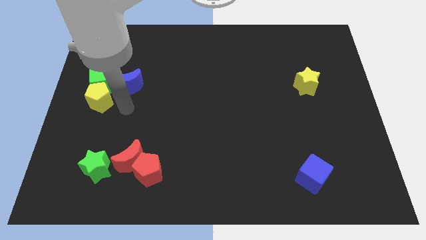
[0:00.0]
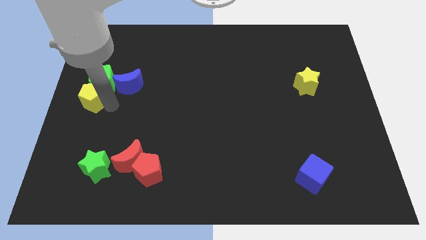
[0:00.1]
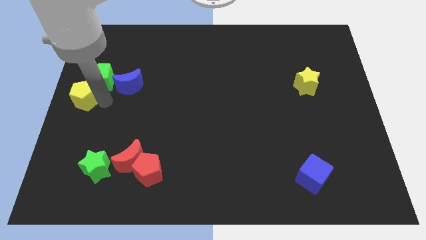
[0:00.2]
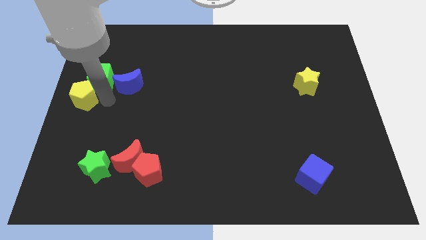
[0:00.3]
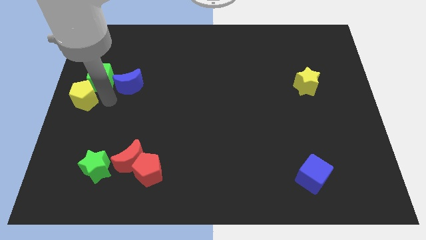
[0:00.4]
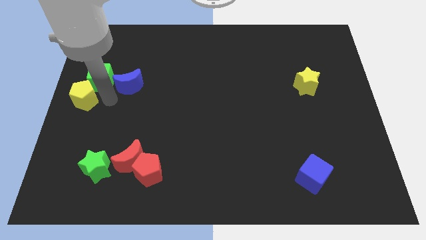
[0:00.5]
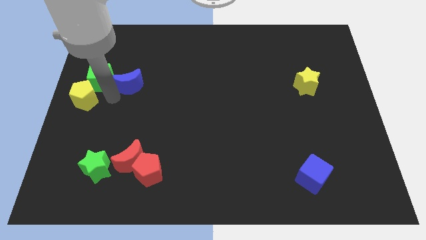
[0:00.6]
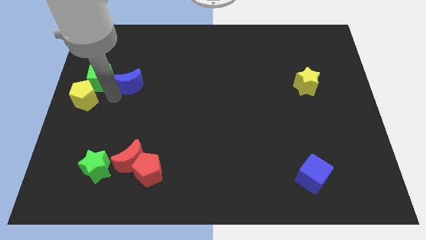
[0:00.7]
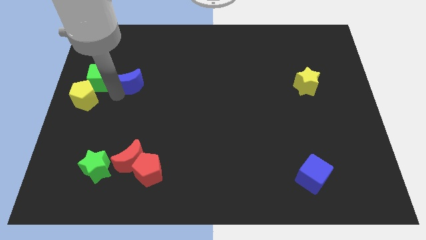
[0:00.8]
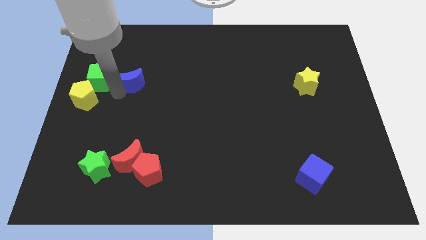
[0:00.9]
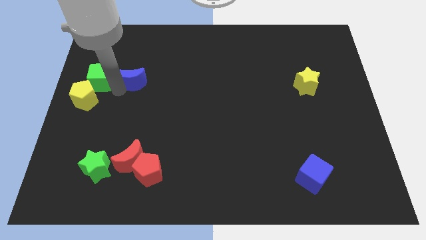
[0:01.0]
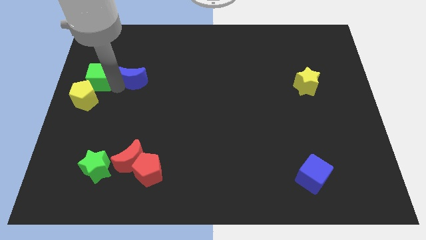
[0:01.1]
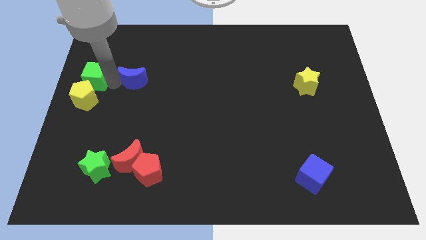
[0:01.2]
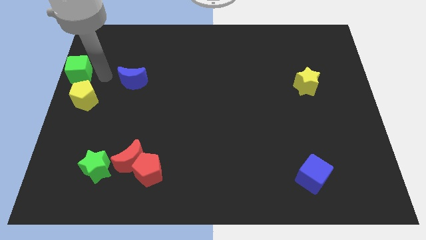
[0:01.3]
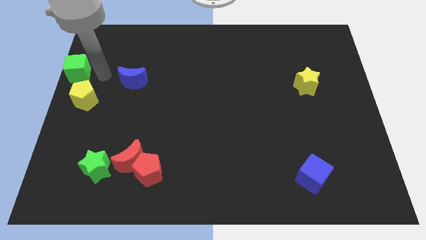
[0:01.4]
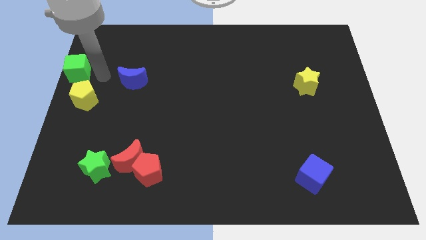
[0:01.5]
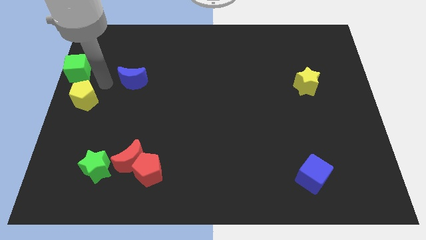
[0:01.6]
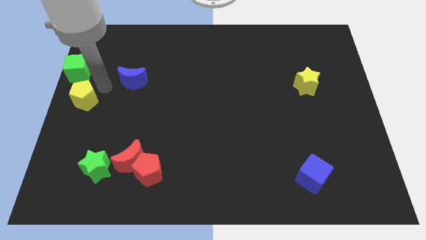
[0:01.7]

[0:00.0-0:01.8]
separate the green cube from the blue crescent and the yellow pentagon

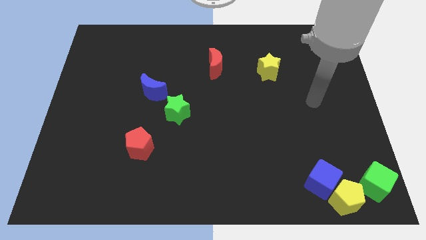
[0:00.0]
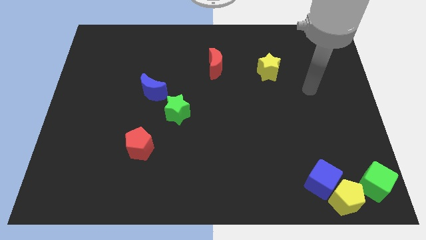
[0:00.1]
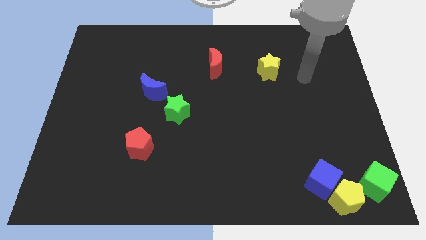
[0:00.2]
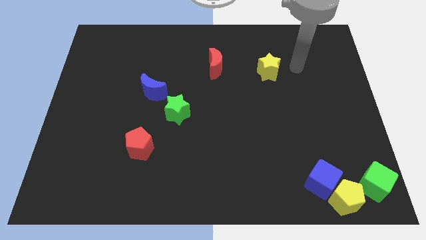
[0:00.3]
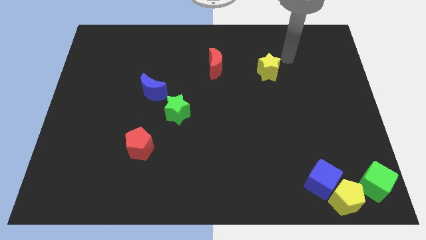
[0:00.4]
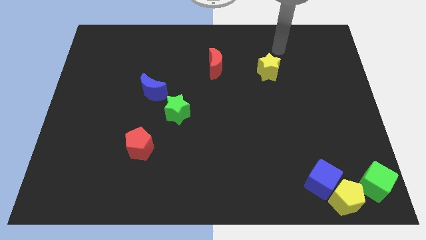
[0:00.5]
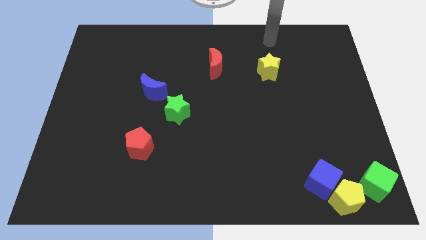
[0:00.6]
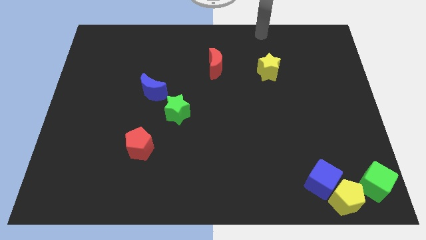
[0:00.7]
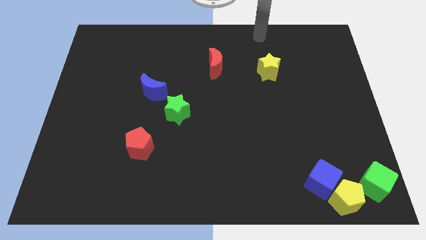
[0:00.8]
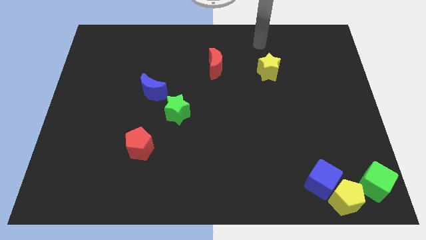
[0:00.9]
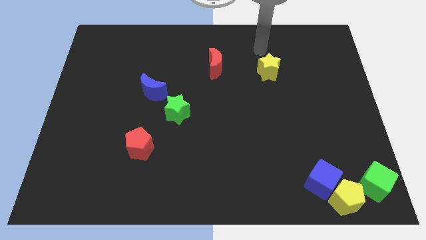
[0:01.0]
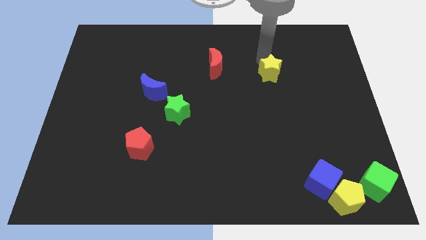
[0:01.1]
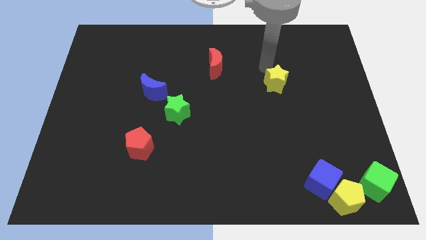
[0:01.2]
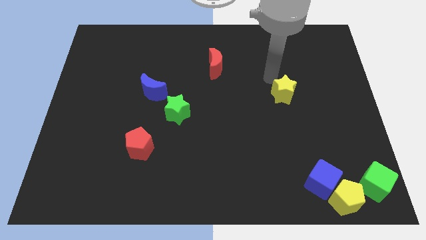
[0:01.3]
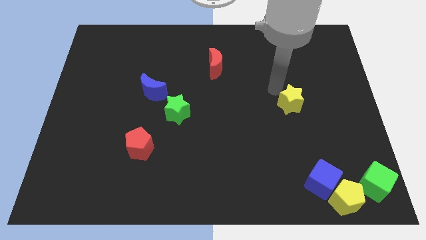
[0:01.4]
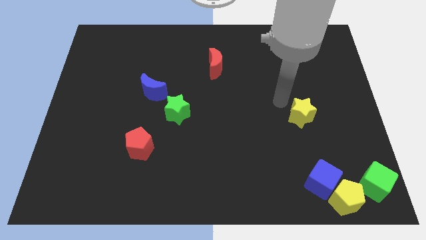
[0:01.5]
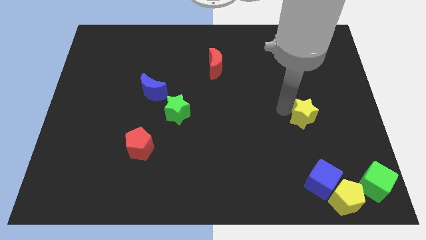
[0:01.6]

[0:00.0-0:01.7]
move the yellow star diagonally bottom right to the red moon

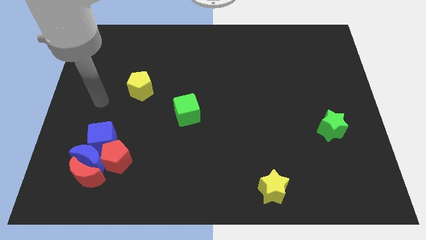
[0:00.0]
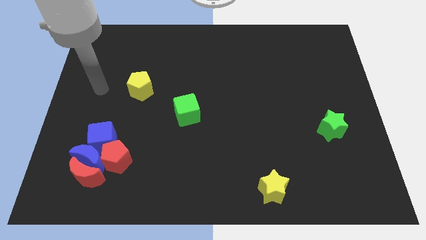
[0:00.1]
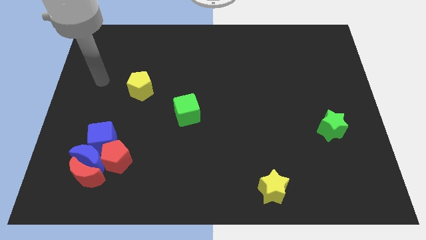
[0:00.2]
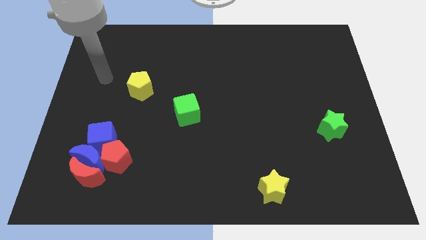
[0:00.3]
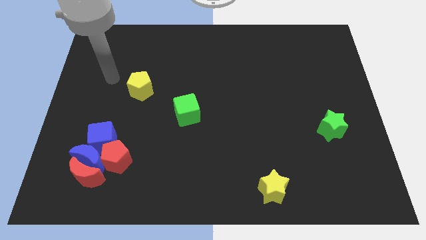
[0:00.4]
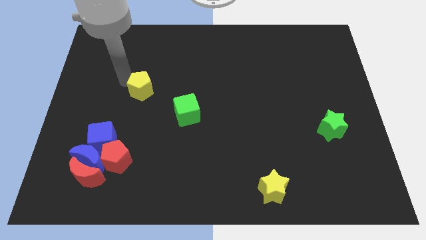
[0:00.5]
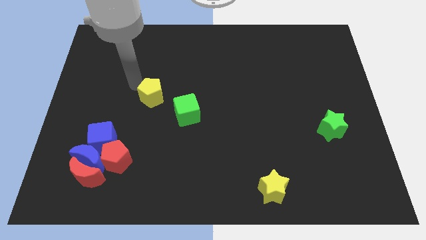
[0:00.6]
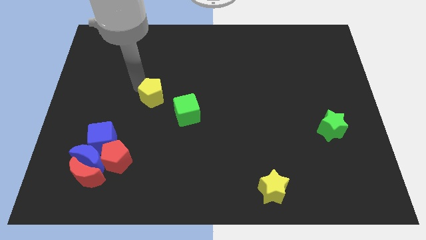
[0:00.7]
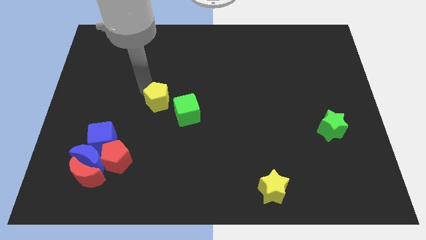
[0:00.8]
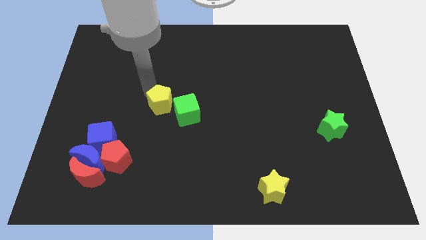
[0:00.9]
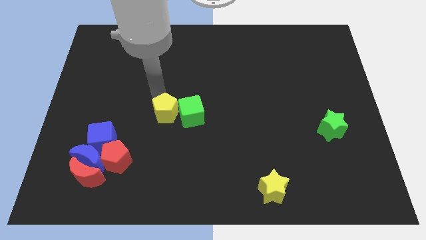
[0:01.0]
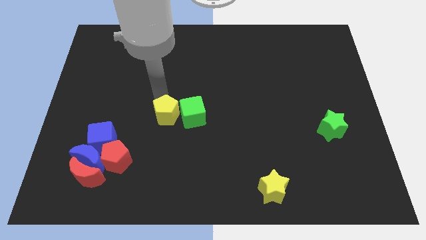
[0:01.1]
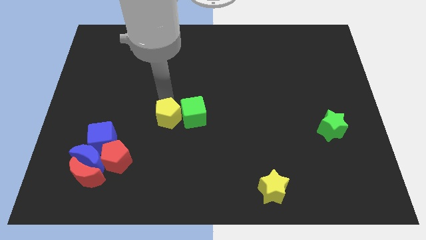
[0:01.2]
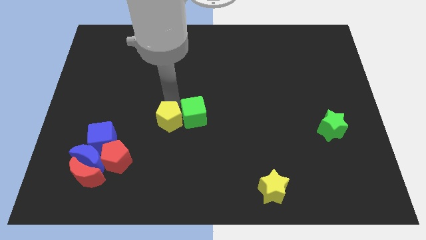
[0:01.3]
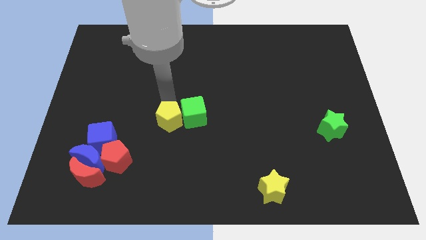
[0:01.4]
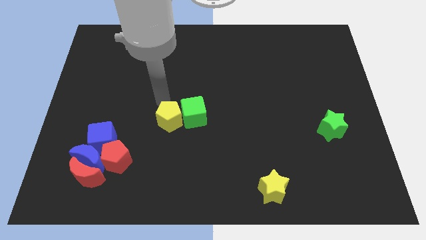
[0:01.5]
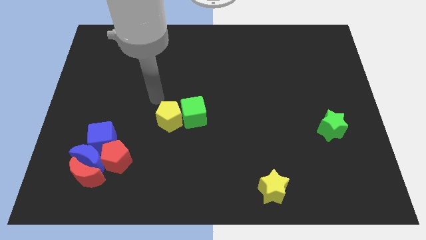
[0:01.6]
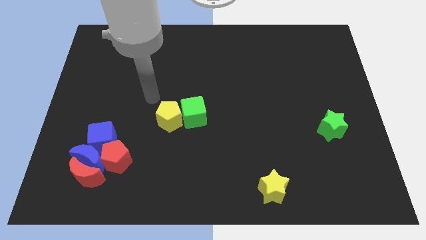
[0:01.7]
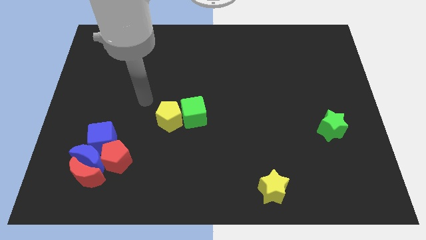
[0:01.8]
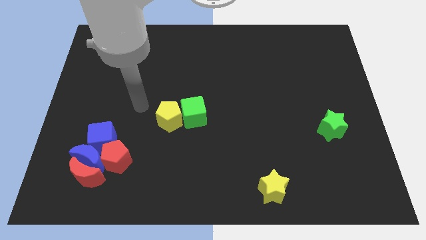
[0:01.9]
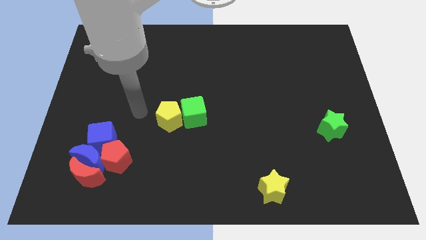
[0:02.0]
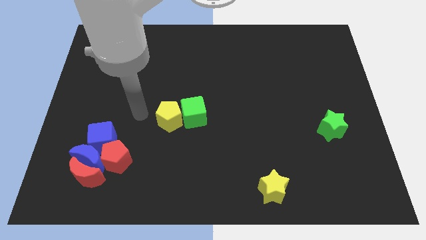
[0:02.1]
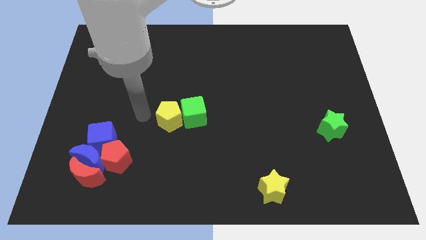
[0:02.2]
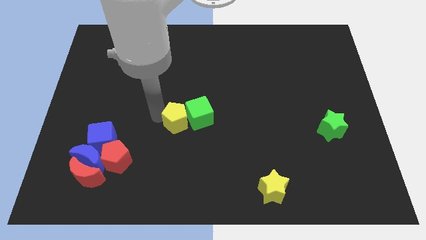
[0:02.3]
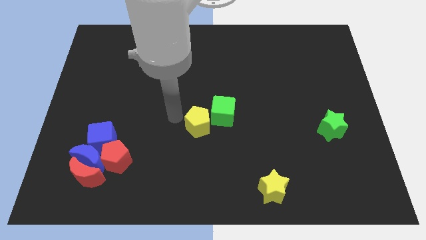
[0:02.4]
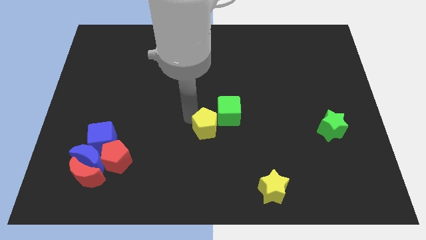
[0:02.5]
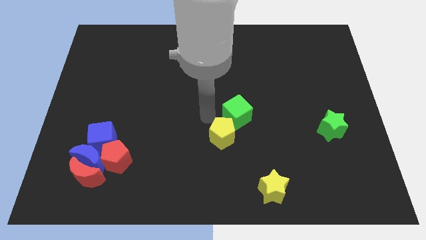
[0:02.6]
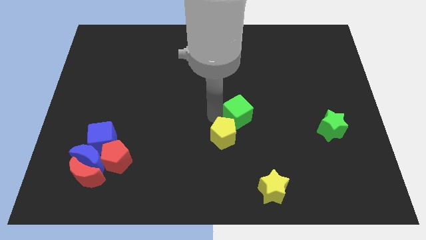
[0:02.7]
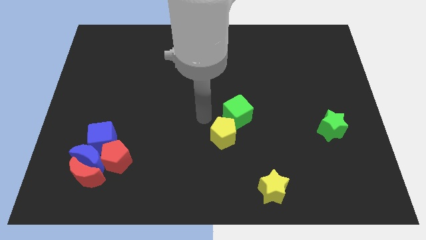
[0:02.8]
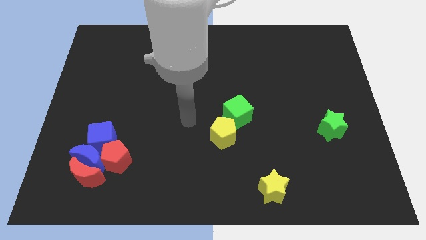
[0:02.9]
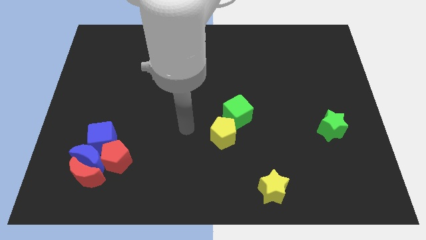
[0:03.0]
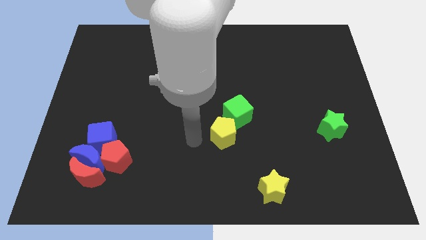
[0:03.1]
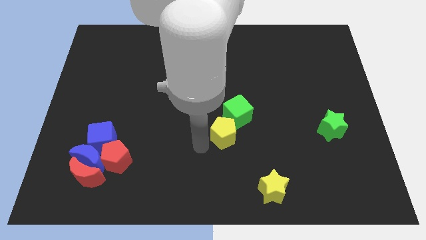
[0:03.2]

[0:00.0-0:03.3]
move yellow pentagon to the center

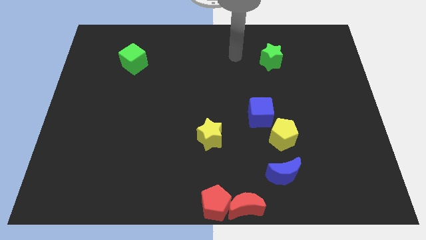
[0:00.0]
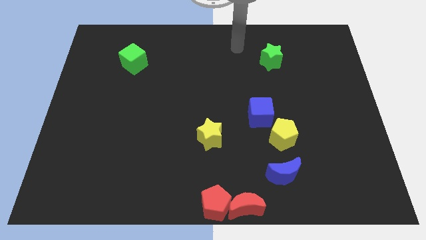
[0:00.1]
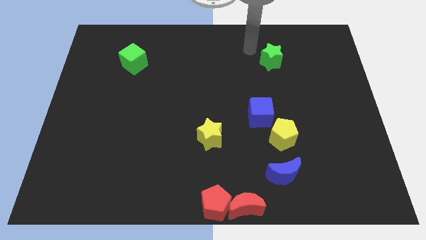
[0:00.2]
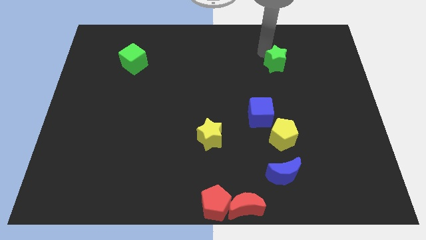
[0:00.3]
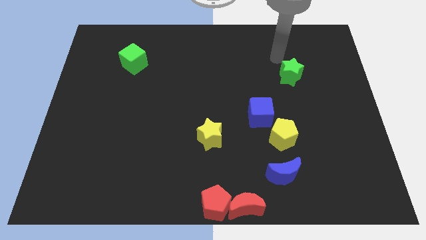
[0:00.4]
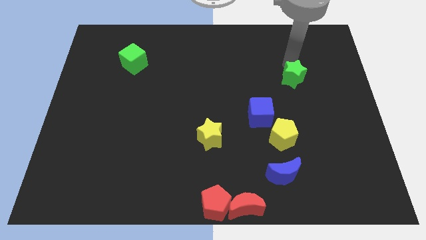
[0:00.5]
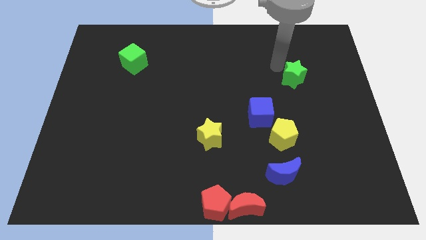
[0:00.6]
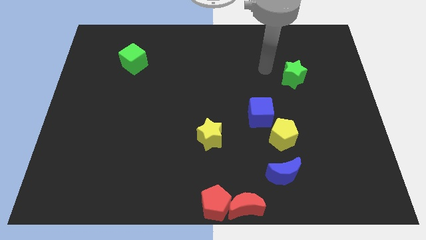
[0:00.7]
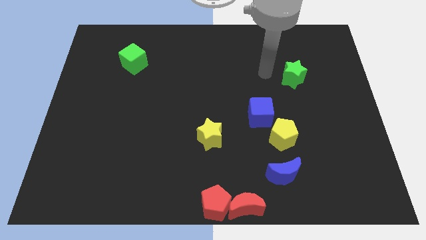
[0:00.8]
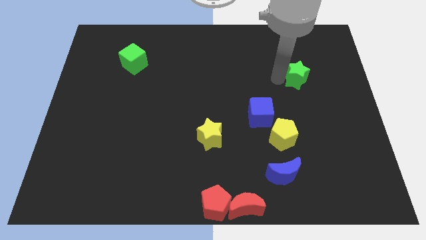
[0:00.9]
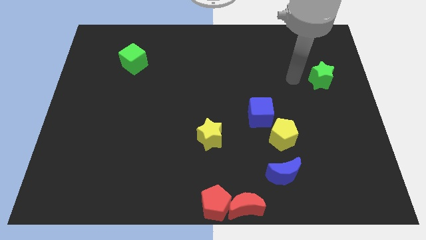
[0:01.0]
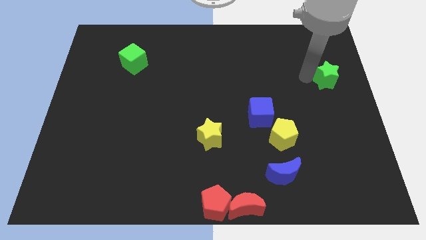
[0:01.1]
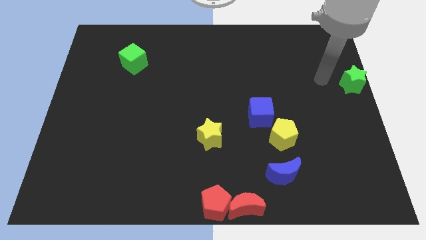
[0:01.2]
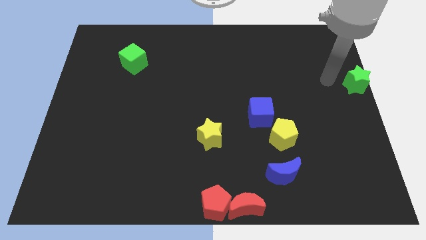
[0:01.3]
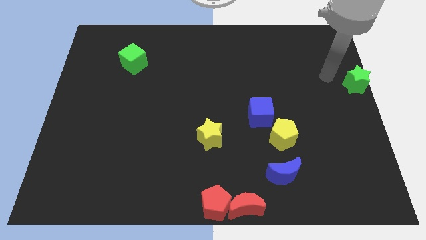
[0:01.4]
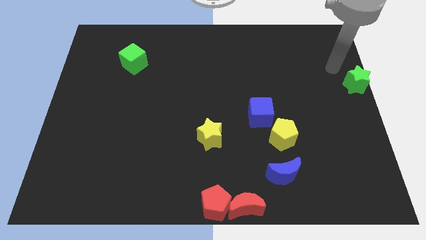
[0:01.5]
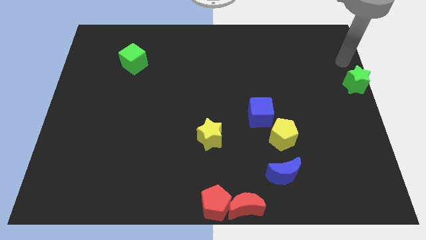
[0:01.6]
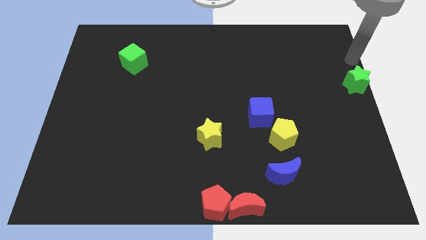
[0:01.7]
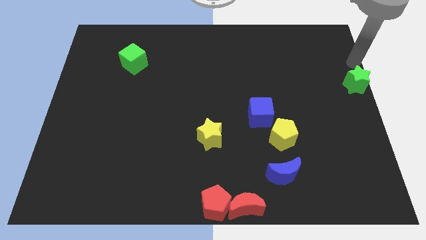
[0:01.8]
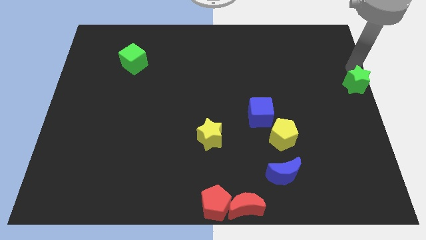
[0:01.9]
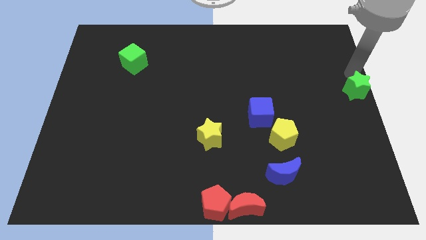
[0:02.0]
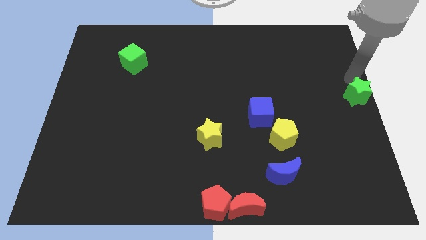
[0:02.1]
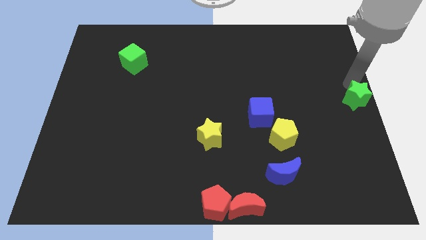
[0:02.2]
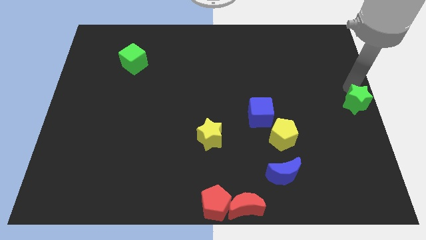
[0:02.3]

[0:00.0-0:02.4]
place the green star at the right center of the board
